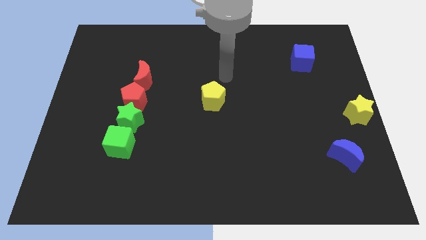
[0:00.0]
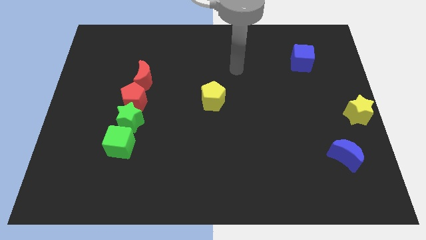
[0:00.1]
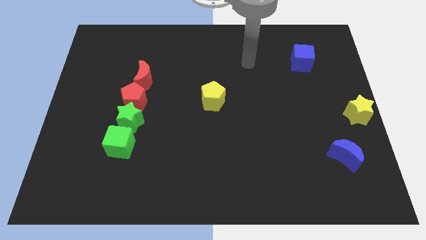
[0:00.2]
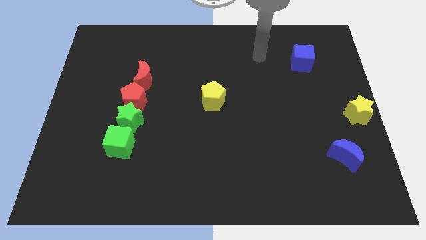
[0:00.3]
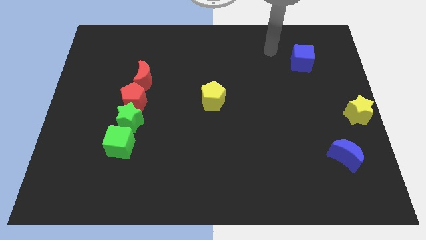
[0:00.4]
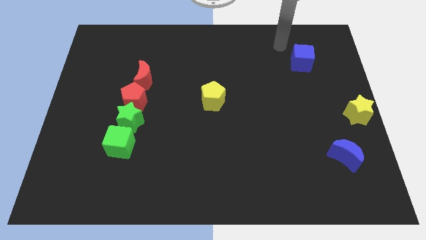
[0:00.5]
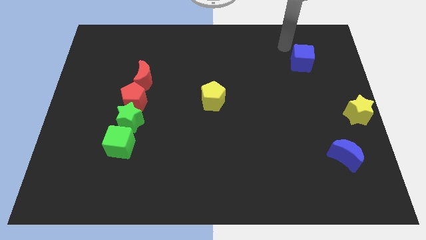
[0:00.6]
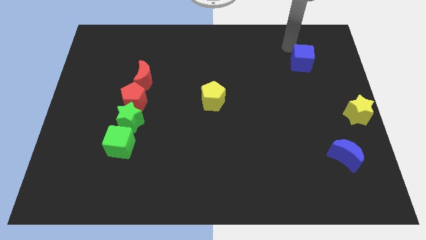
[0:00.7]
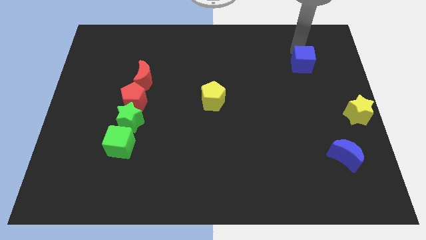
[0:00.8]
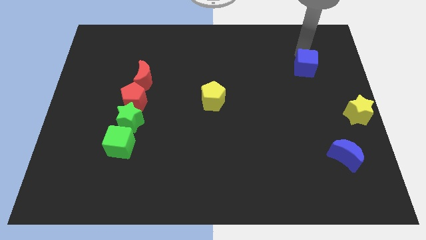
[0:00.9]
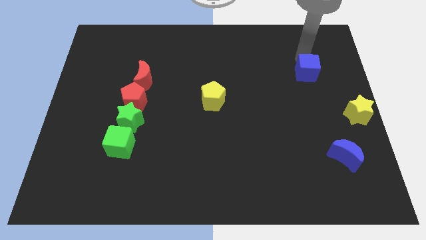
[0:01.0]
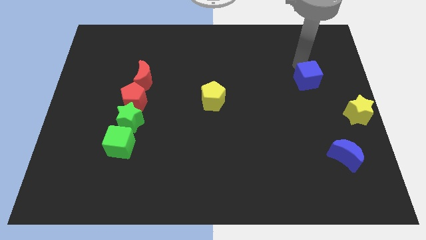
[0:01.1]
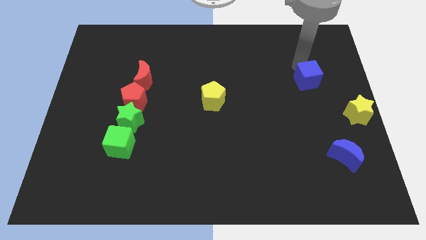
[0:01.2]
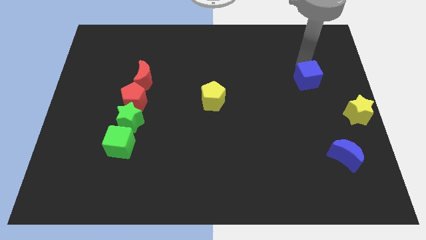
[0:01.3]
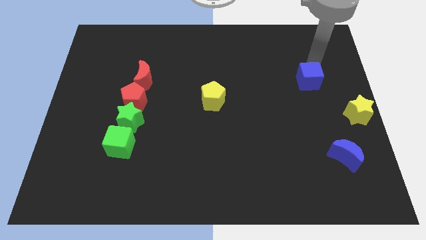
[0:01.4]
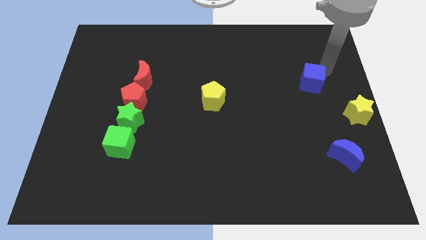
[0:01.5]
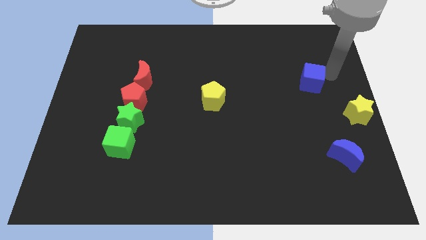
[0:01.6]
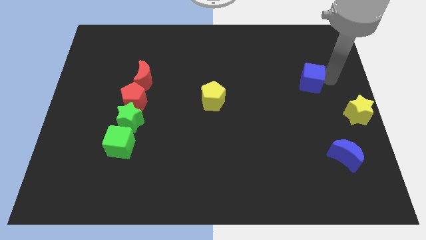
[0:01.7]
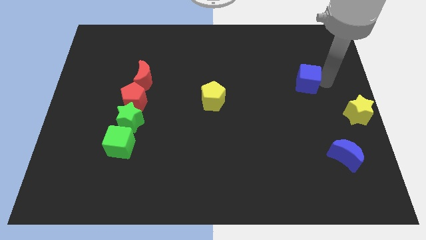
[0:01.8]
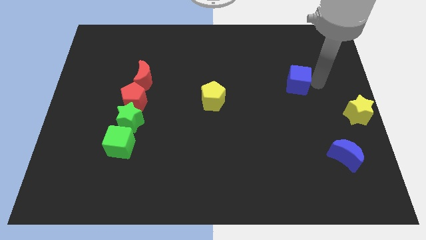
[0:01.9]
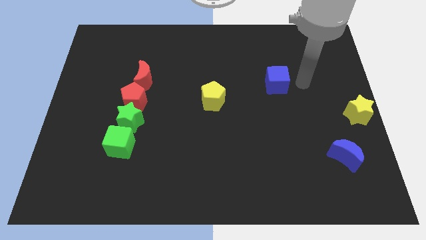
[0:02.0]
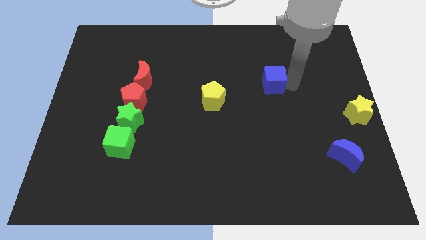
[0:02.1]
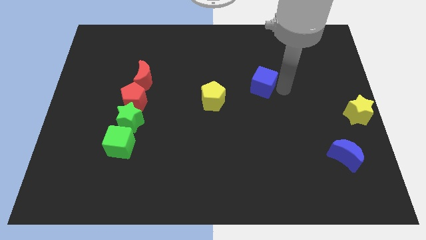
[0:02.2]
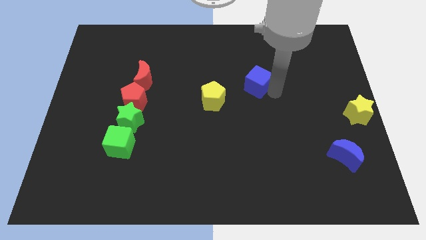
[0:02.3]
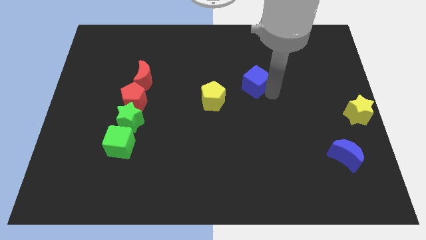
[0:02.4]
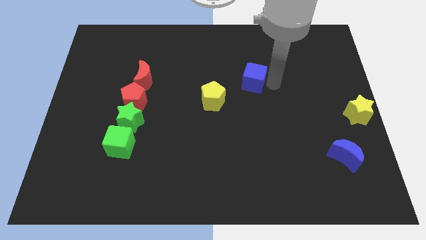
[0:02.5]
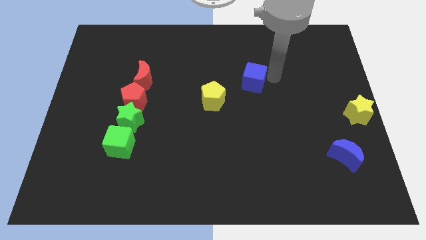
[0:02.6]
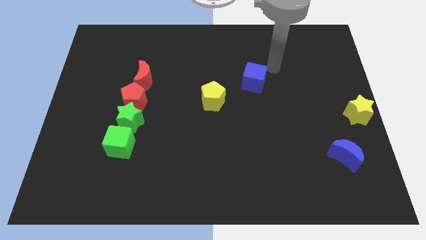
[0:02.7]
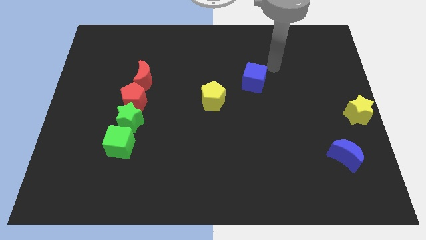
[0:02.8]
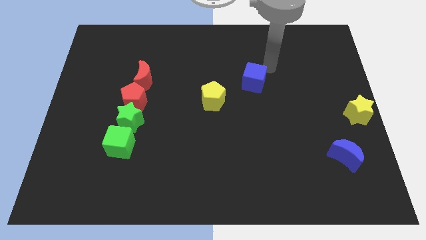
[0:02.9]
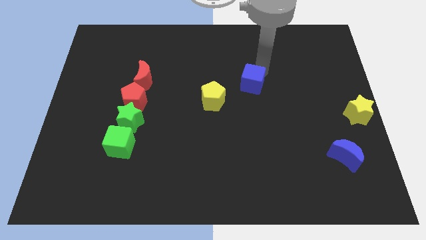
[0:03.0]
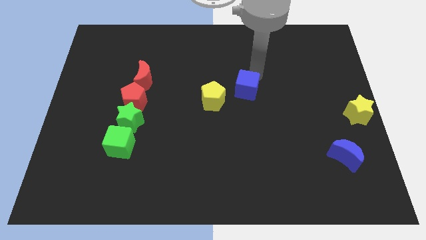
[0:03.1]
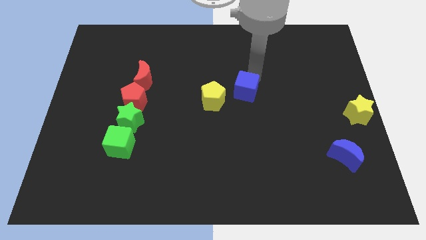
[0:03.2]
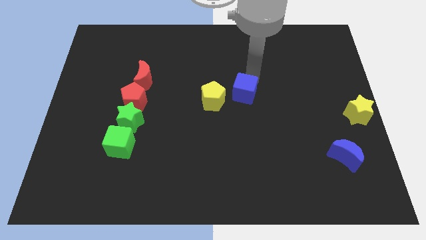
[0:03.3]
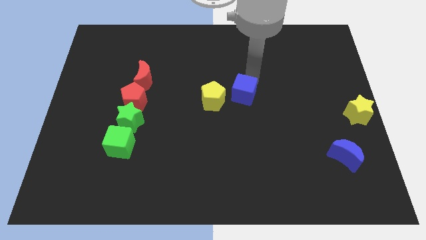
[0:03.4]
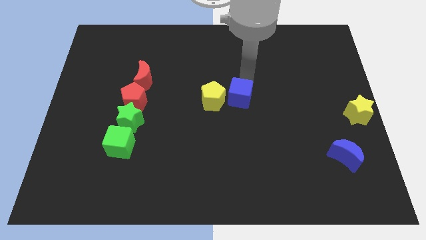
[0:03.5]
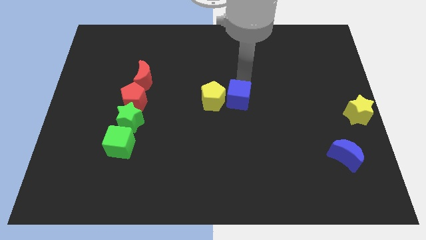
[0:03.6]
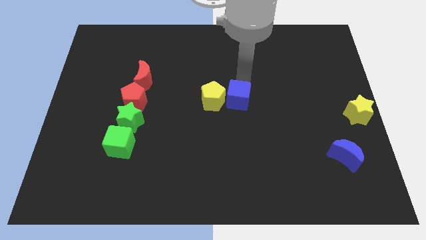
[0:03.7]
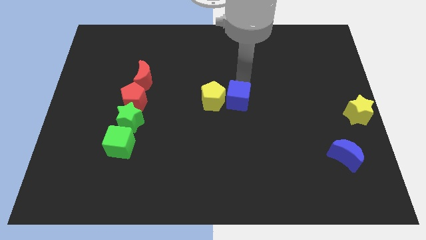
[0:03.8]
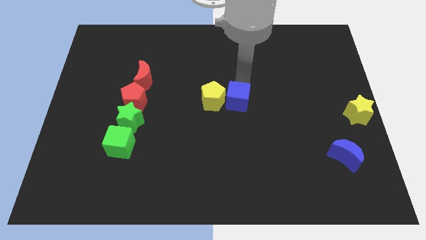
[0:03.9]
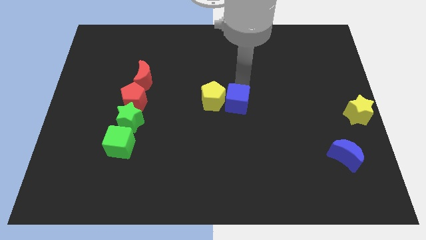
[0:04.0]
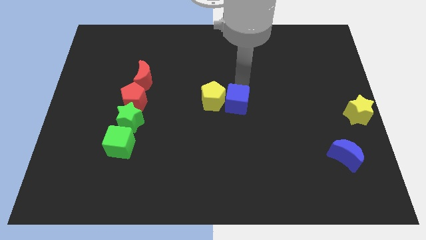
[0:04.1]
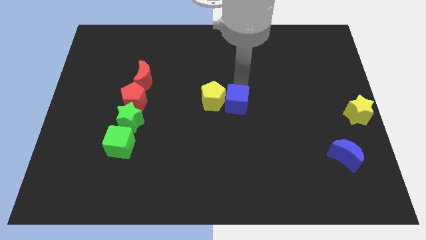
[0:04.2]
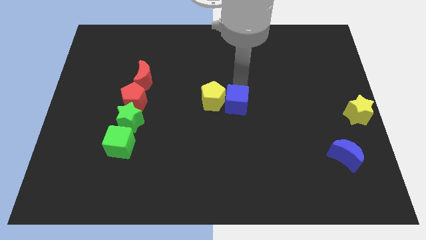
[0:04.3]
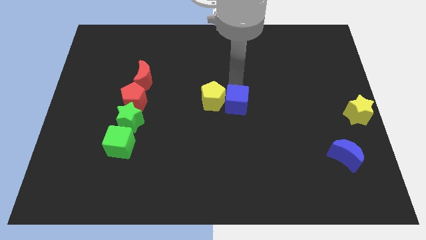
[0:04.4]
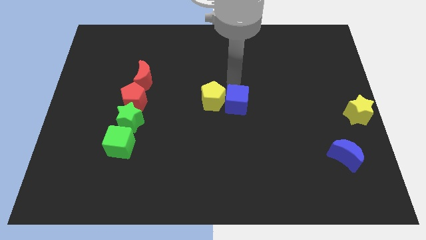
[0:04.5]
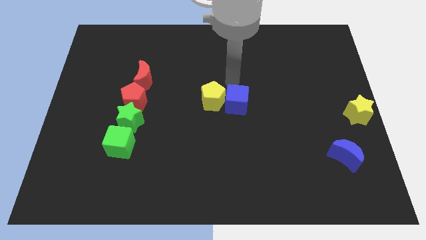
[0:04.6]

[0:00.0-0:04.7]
move the blue cube close to the right side of the yellow pentagon

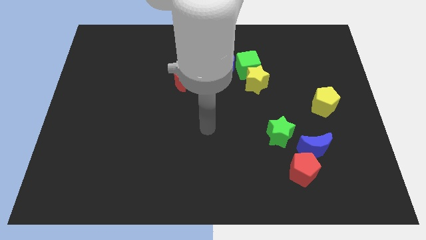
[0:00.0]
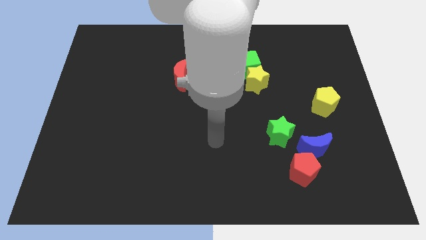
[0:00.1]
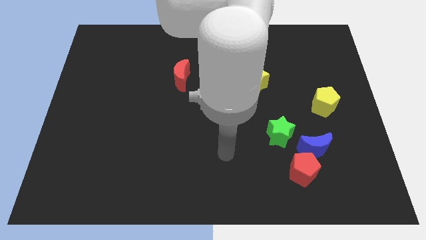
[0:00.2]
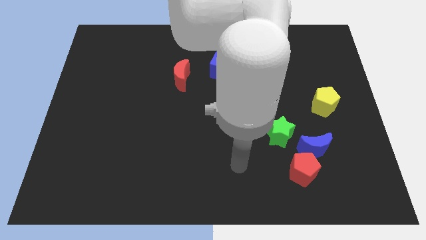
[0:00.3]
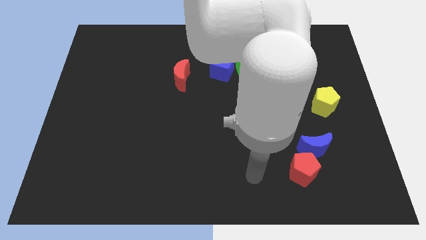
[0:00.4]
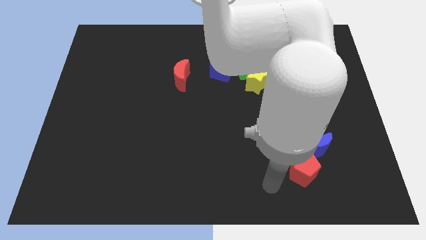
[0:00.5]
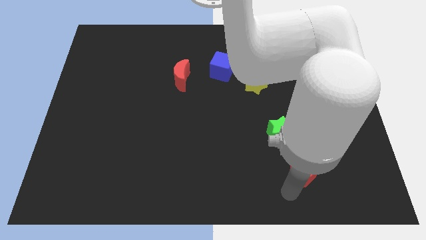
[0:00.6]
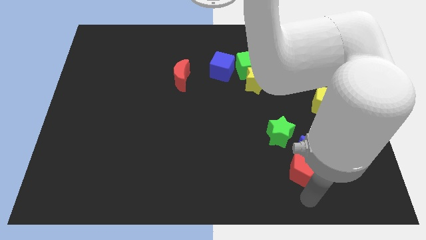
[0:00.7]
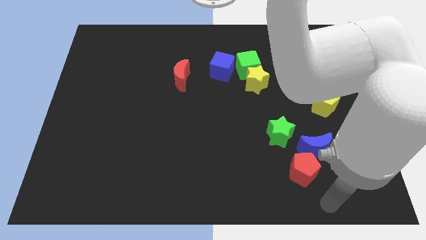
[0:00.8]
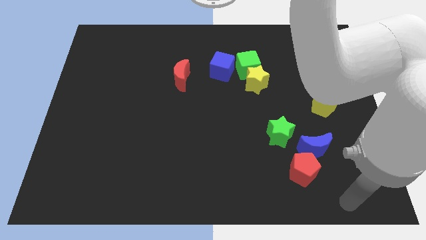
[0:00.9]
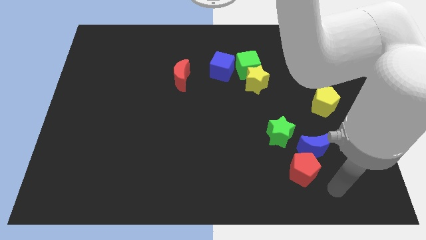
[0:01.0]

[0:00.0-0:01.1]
move the arm to the bottom of the red pentagon

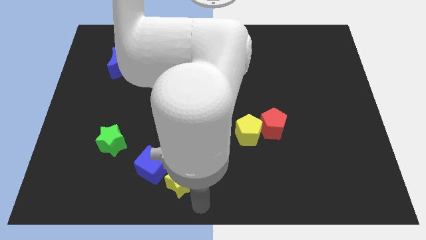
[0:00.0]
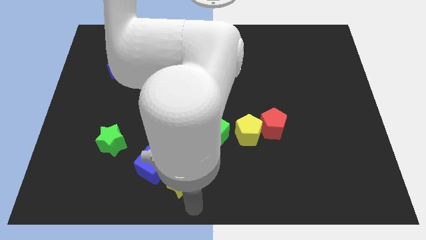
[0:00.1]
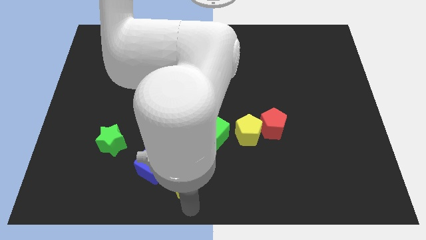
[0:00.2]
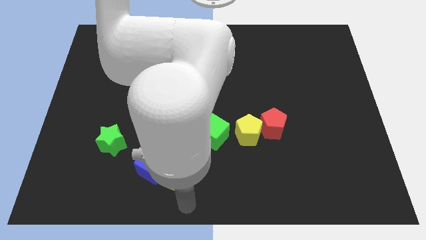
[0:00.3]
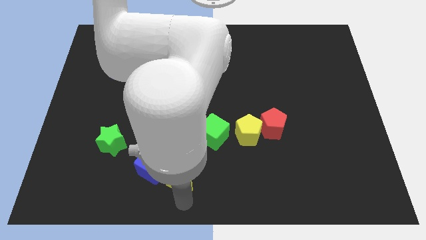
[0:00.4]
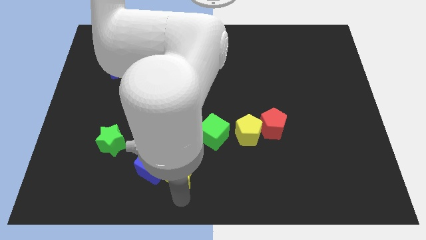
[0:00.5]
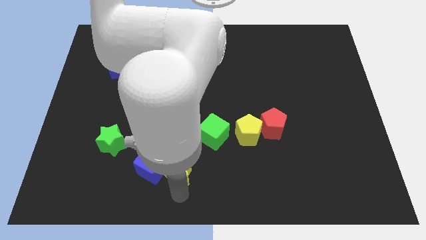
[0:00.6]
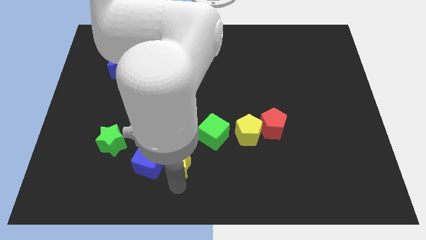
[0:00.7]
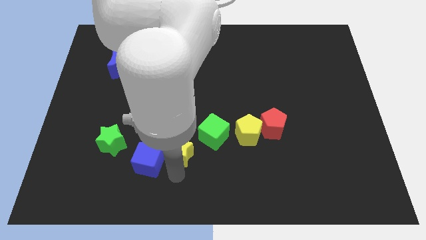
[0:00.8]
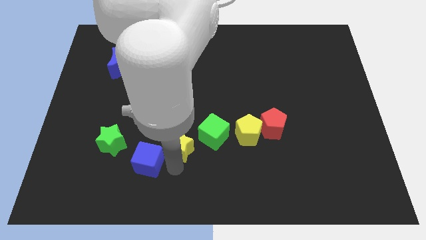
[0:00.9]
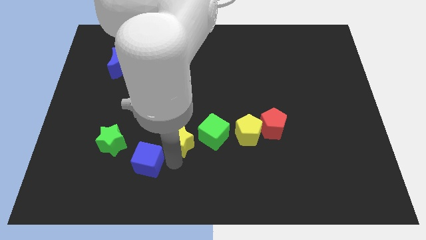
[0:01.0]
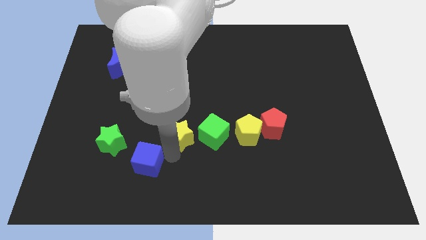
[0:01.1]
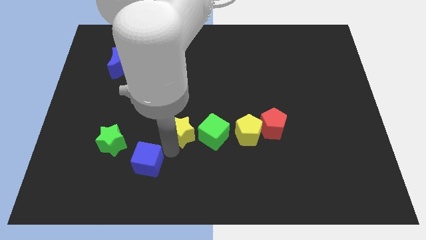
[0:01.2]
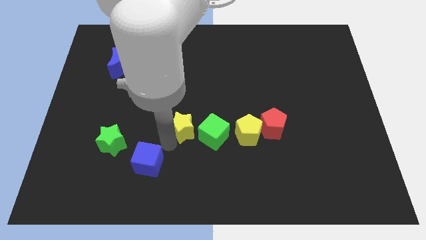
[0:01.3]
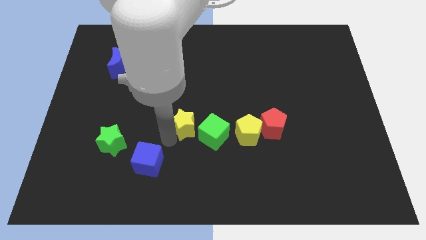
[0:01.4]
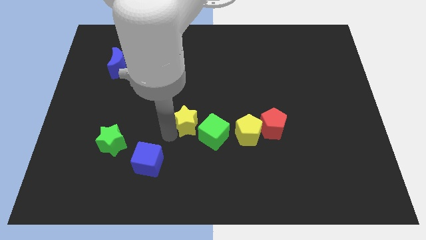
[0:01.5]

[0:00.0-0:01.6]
push the yellow star to the top right side of the blue cube

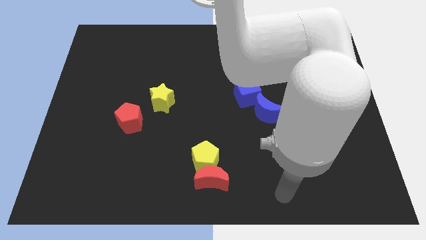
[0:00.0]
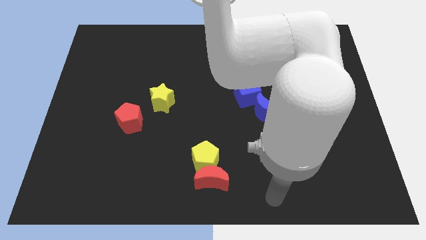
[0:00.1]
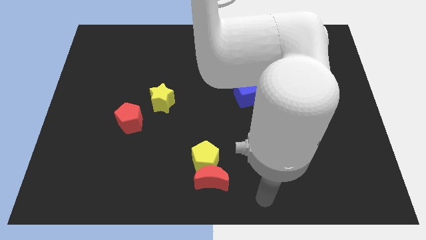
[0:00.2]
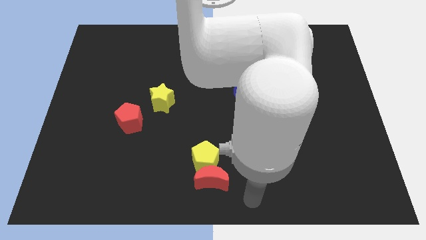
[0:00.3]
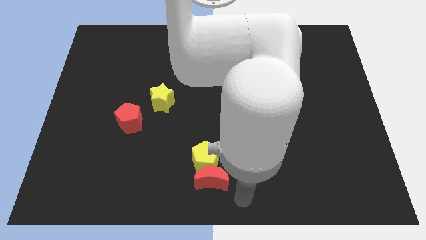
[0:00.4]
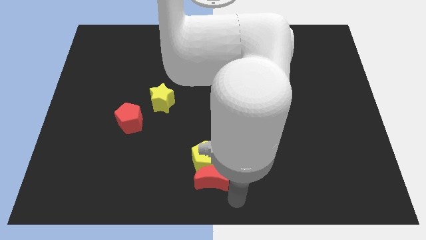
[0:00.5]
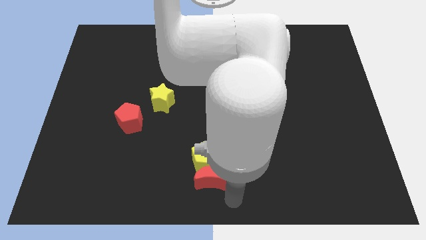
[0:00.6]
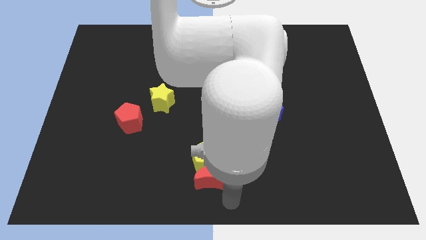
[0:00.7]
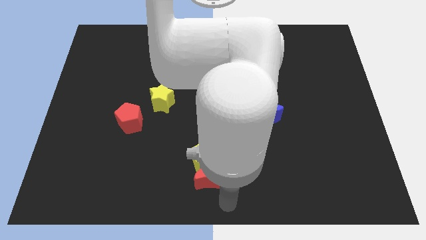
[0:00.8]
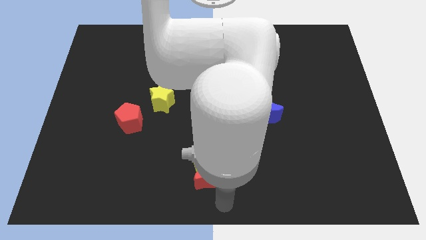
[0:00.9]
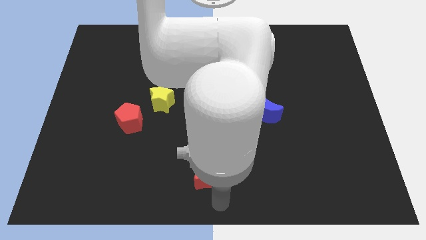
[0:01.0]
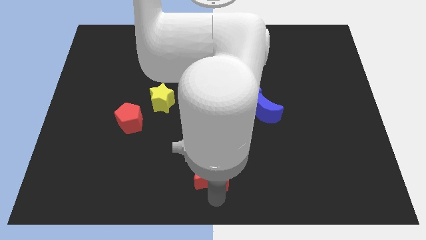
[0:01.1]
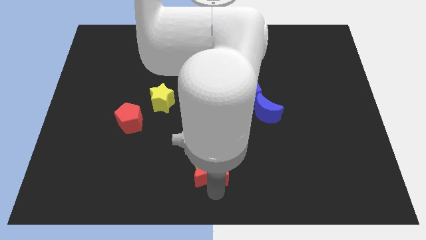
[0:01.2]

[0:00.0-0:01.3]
point your arm below the red moon

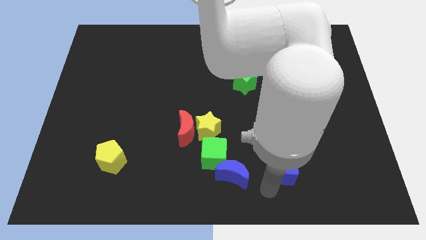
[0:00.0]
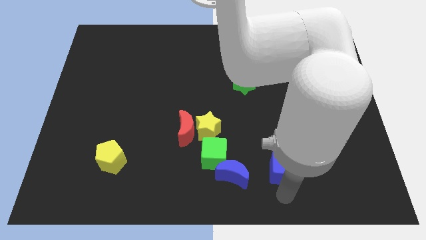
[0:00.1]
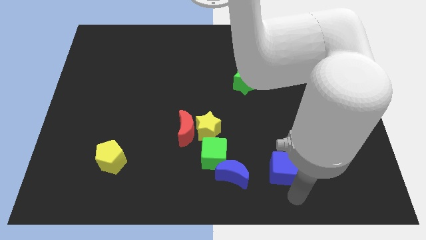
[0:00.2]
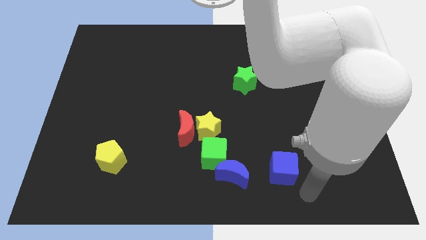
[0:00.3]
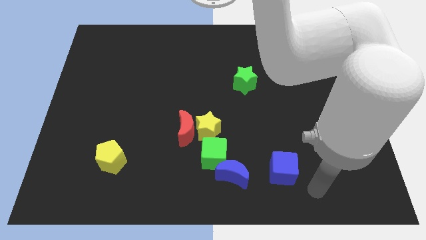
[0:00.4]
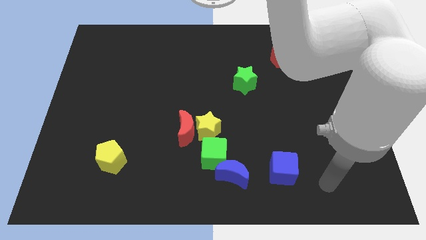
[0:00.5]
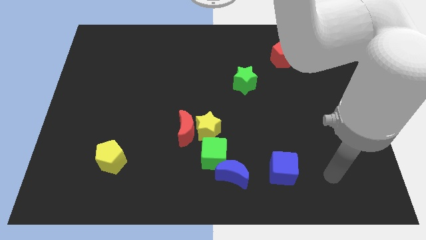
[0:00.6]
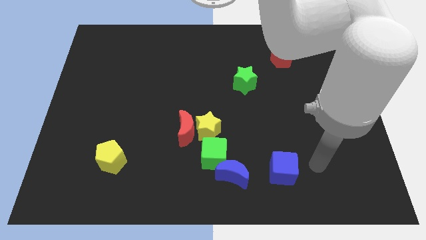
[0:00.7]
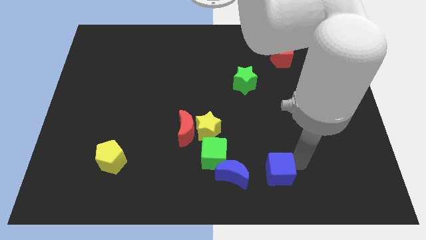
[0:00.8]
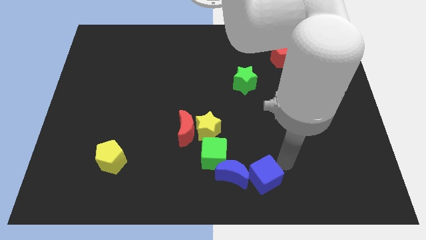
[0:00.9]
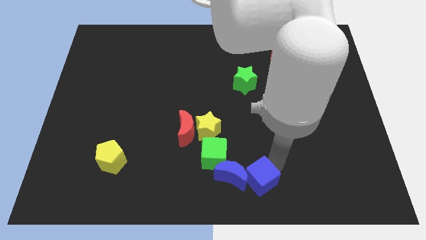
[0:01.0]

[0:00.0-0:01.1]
push the blue cube into the blue moon
